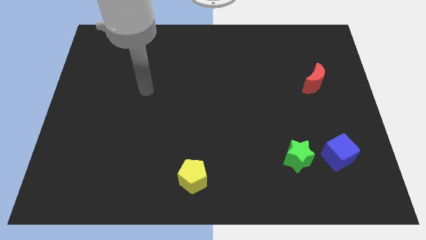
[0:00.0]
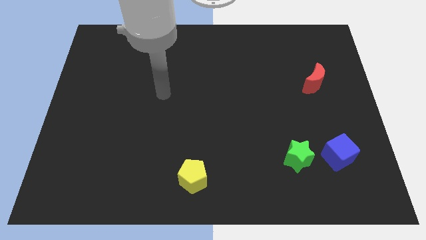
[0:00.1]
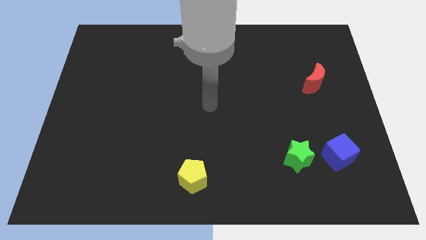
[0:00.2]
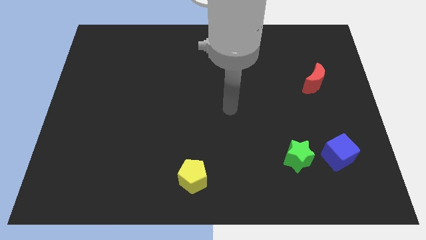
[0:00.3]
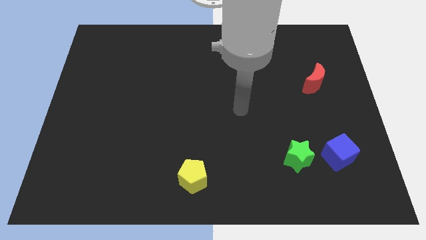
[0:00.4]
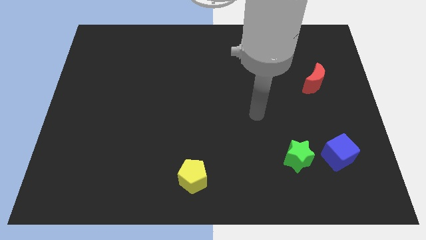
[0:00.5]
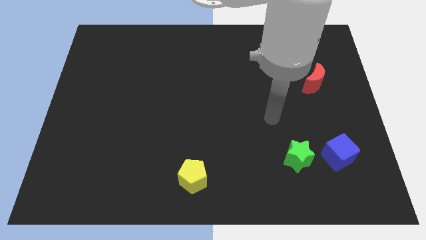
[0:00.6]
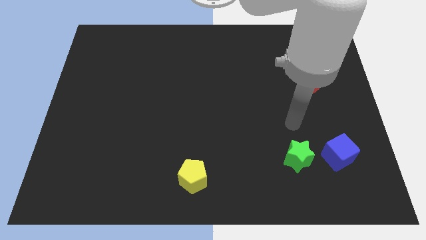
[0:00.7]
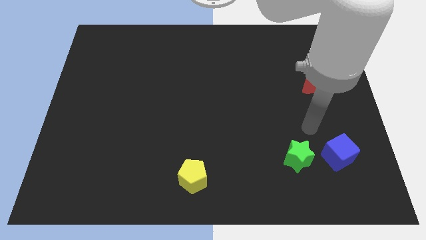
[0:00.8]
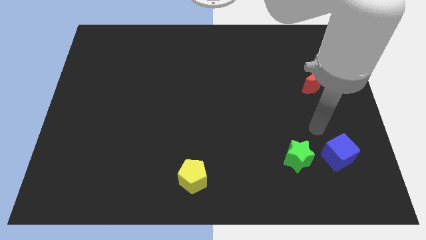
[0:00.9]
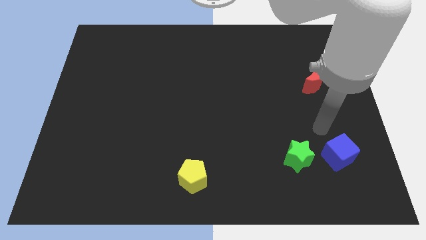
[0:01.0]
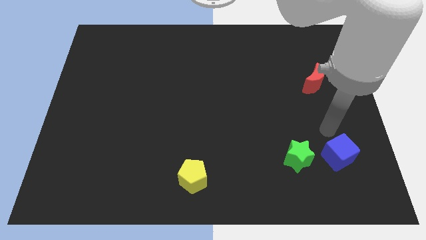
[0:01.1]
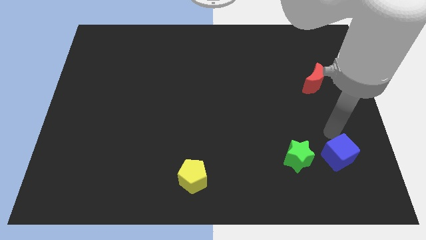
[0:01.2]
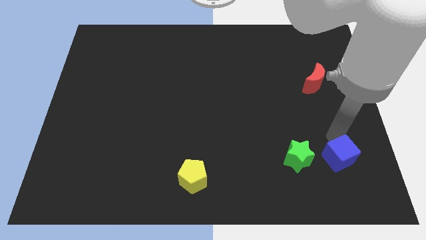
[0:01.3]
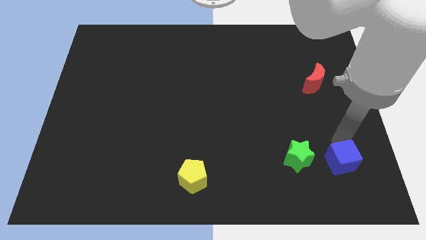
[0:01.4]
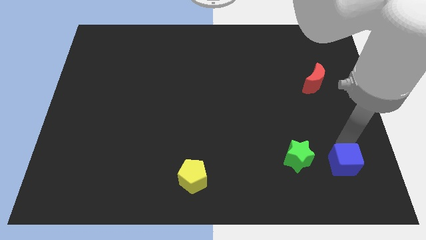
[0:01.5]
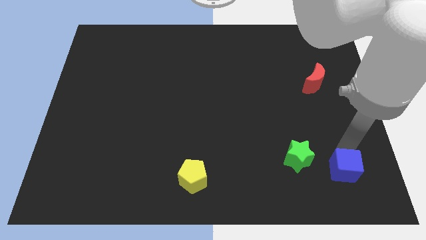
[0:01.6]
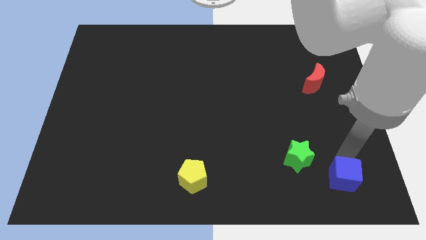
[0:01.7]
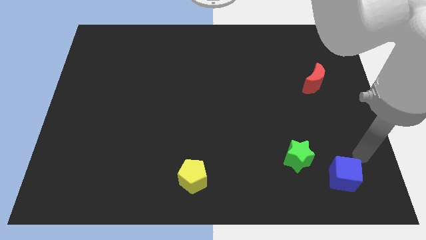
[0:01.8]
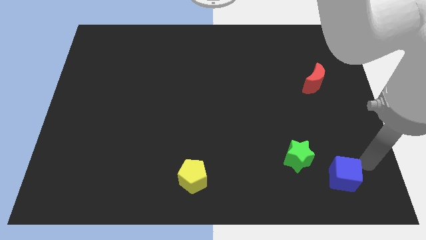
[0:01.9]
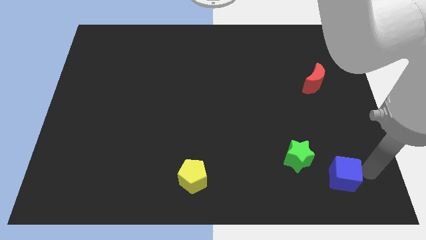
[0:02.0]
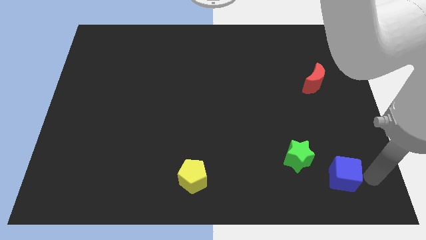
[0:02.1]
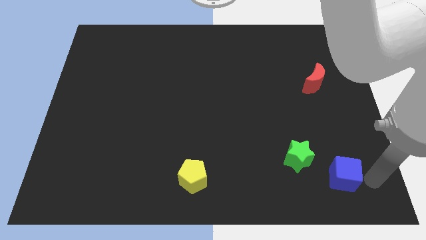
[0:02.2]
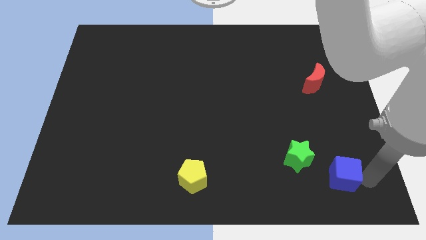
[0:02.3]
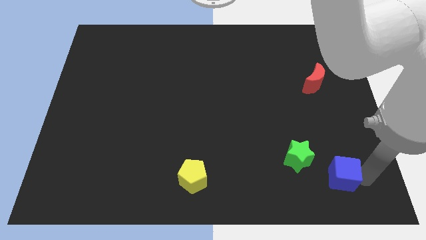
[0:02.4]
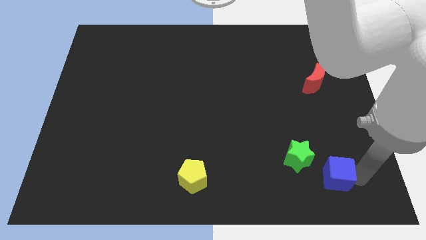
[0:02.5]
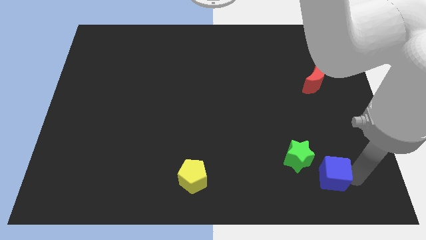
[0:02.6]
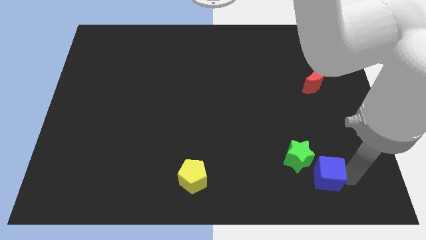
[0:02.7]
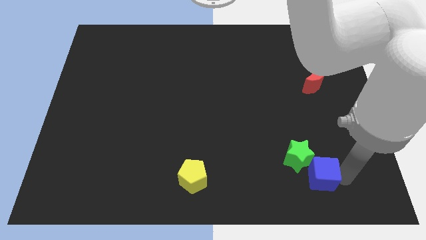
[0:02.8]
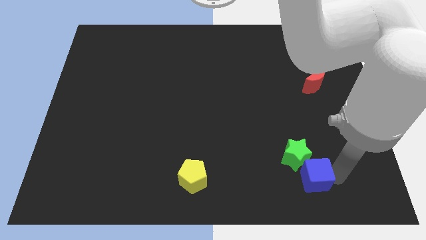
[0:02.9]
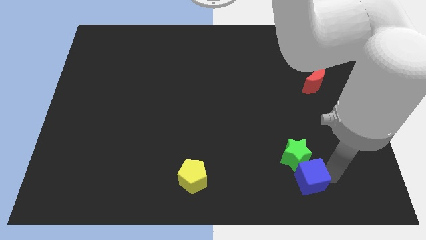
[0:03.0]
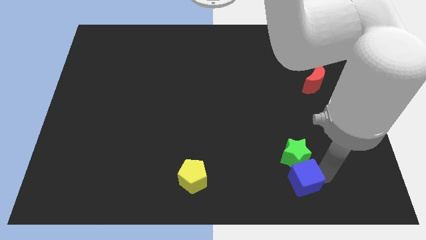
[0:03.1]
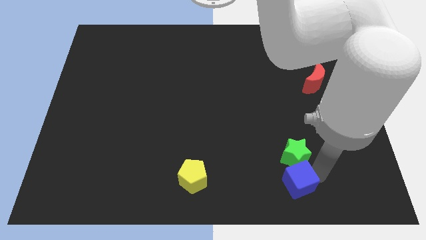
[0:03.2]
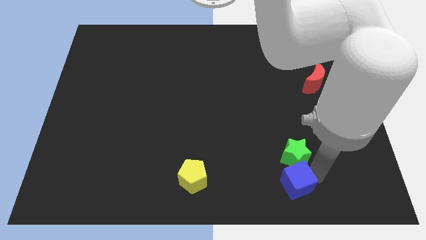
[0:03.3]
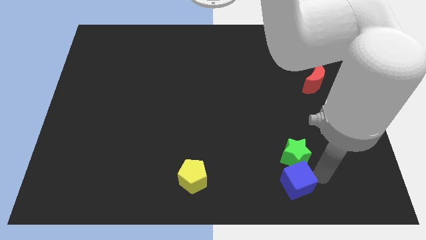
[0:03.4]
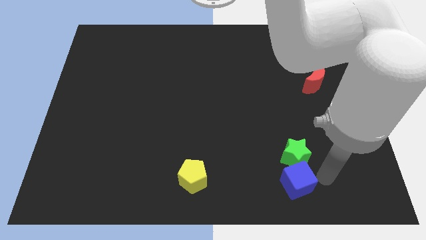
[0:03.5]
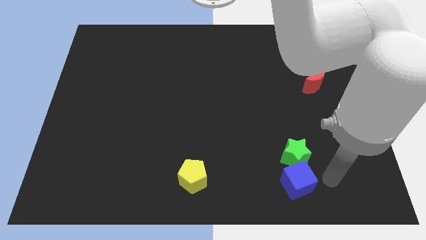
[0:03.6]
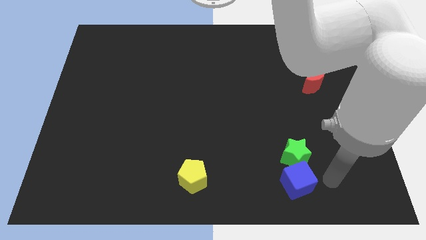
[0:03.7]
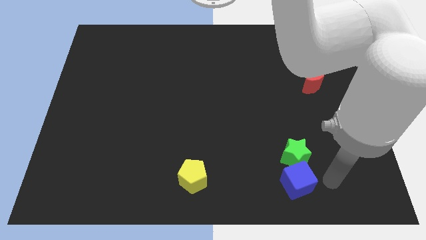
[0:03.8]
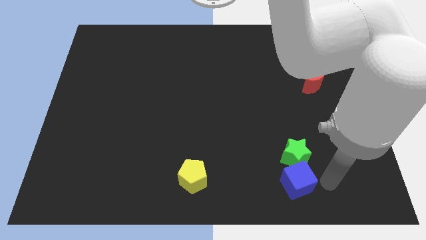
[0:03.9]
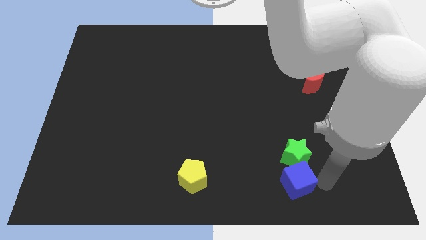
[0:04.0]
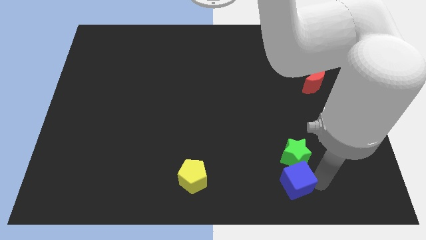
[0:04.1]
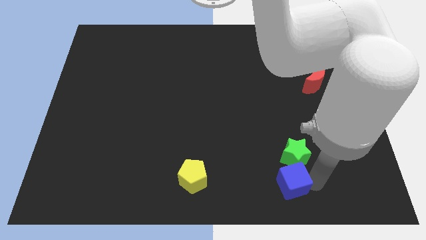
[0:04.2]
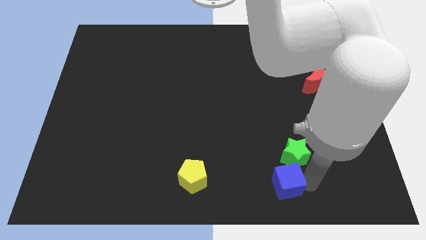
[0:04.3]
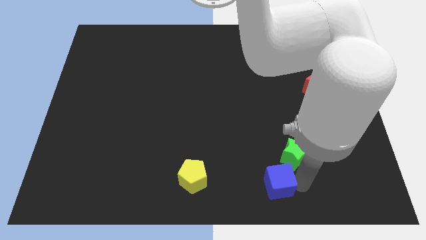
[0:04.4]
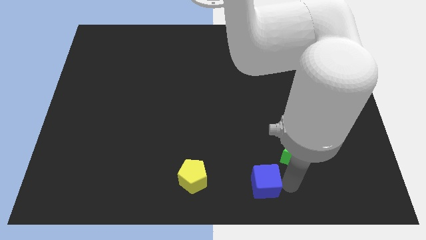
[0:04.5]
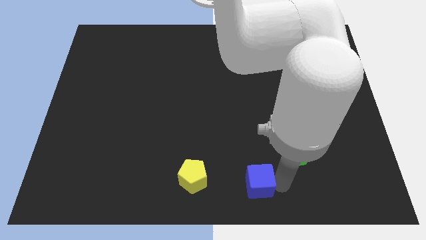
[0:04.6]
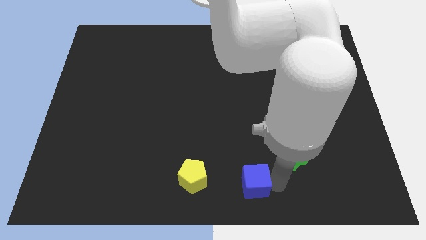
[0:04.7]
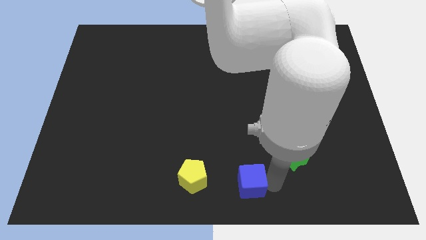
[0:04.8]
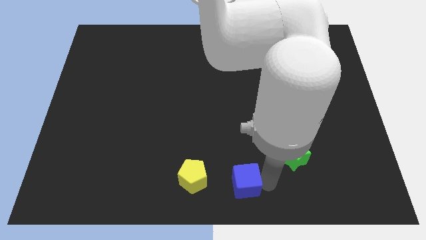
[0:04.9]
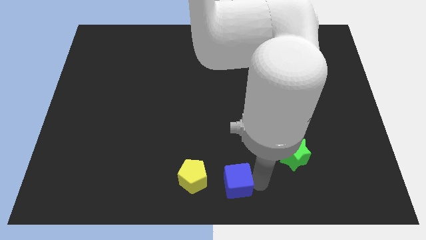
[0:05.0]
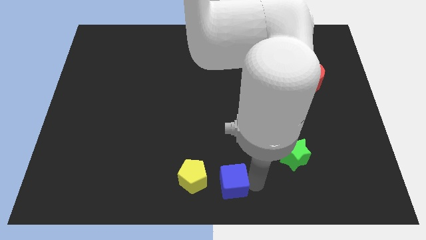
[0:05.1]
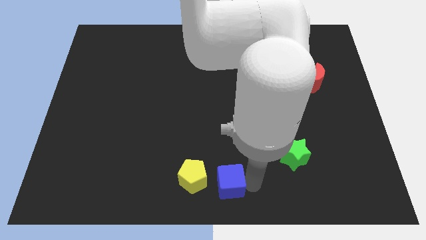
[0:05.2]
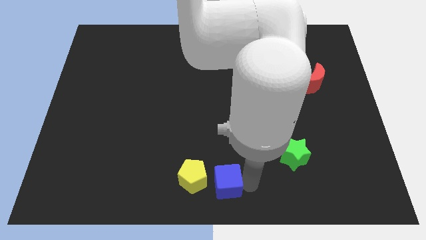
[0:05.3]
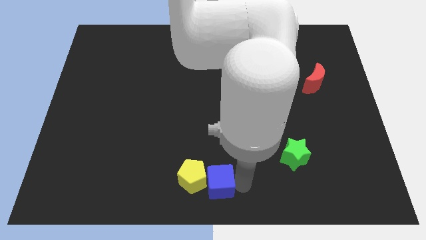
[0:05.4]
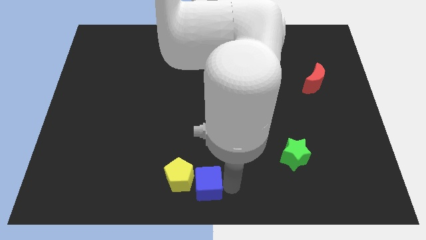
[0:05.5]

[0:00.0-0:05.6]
push the blue block close to the pentagon

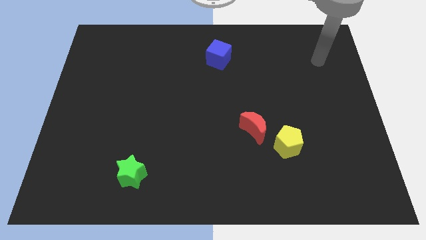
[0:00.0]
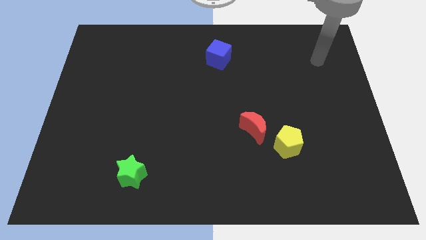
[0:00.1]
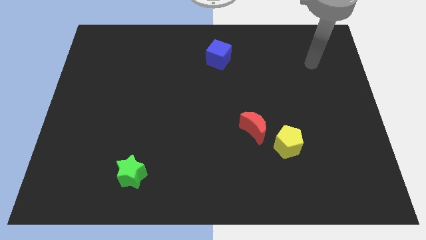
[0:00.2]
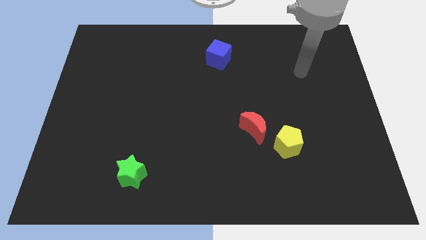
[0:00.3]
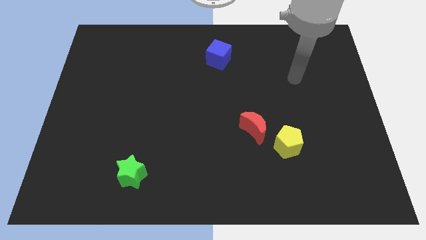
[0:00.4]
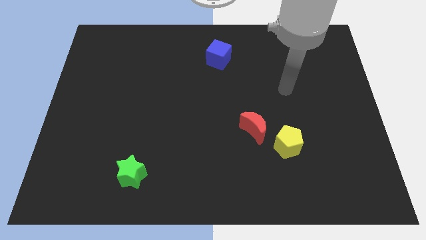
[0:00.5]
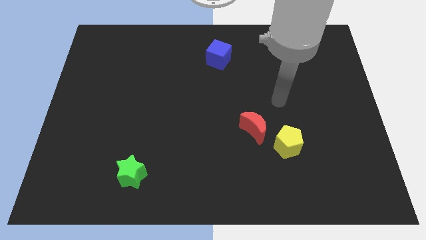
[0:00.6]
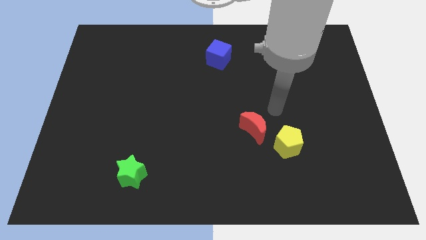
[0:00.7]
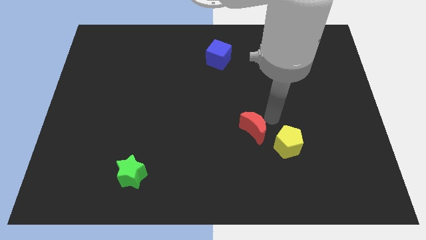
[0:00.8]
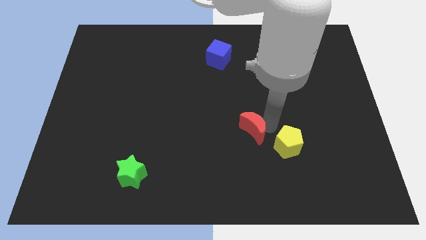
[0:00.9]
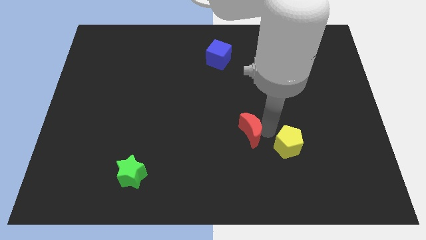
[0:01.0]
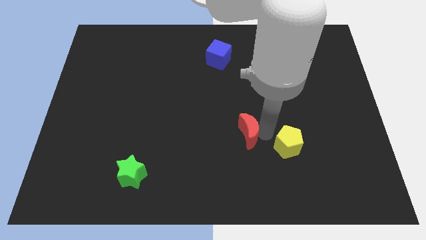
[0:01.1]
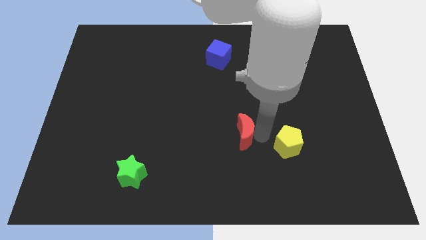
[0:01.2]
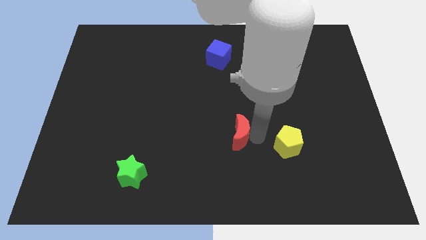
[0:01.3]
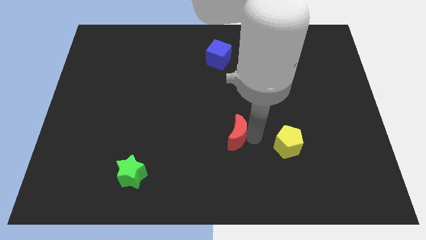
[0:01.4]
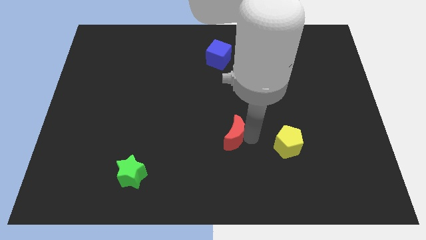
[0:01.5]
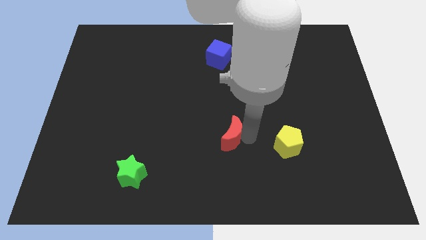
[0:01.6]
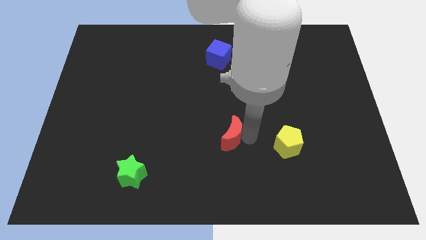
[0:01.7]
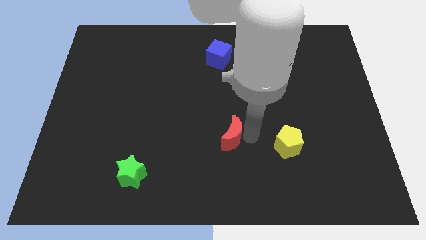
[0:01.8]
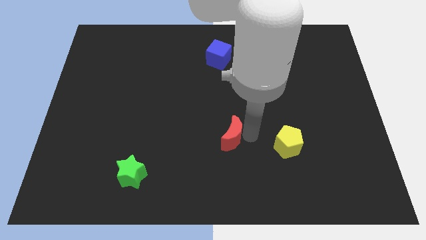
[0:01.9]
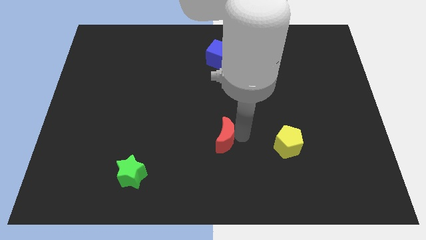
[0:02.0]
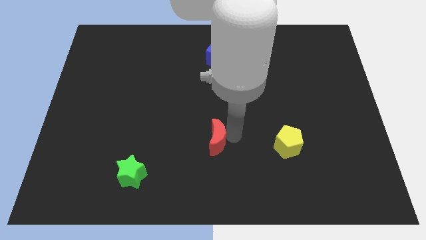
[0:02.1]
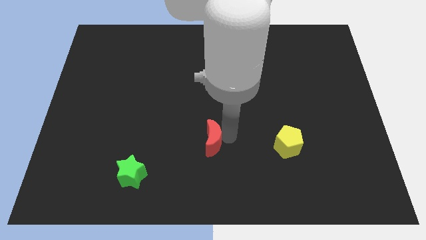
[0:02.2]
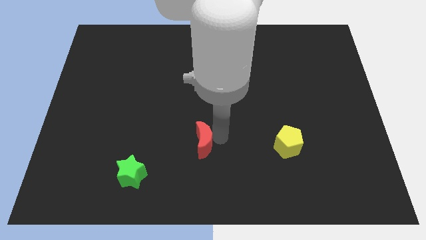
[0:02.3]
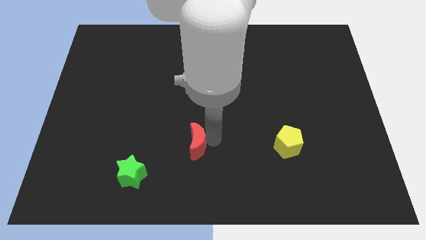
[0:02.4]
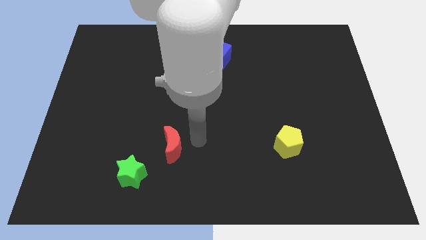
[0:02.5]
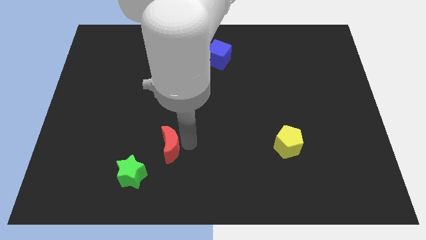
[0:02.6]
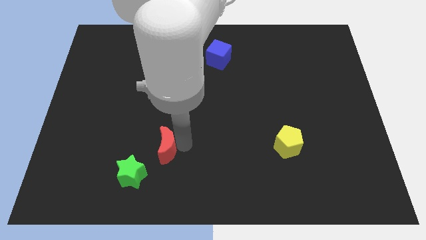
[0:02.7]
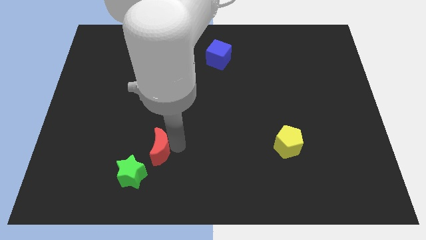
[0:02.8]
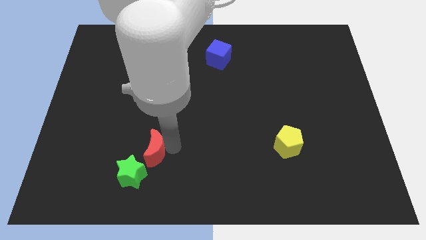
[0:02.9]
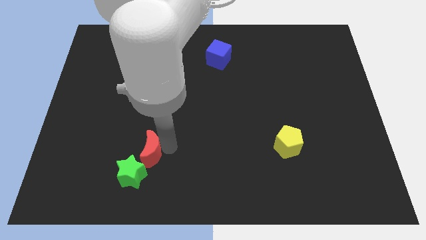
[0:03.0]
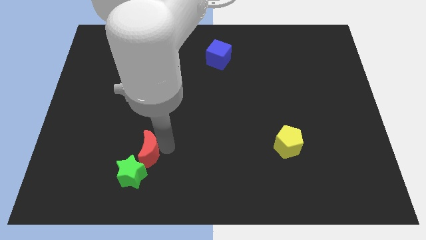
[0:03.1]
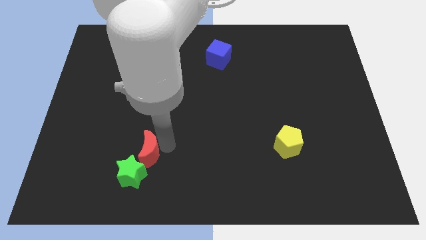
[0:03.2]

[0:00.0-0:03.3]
move the red block to the star
